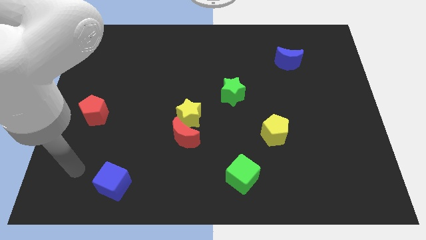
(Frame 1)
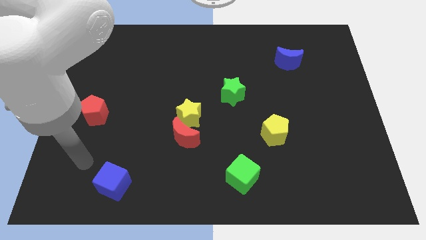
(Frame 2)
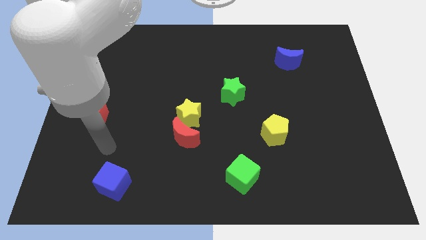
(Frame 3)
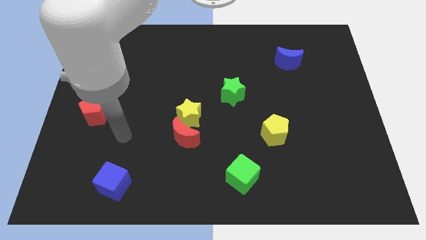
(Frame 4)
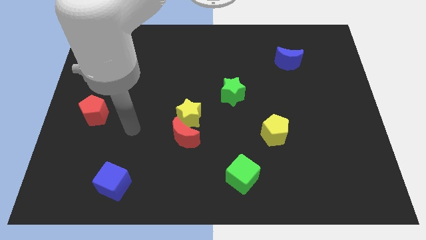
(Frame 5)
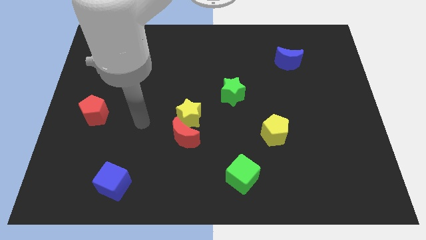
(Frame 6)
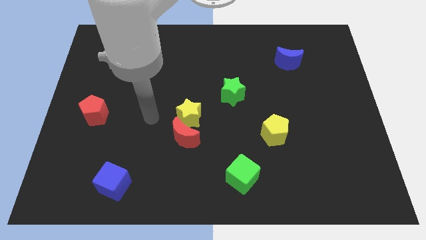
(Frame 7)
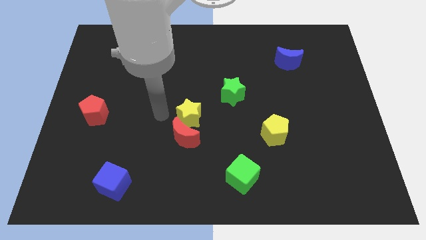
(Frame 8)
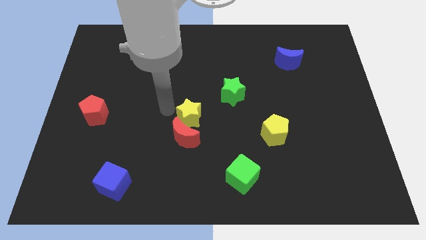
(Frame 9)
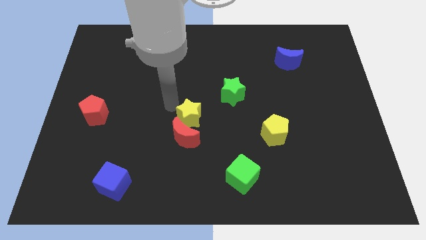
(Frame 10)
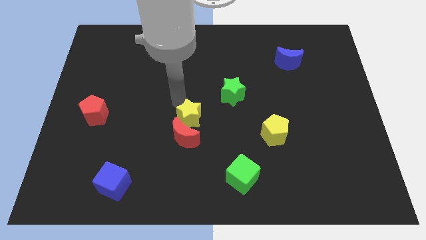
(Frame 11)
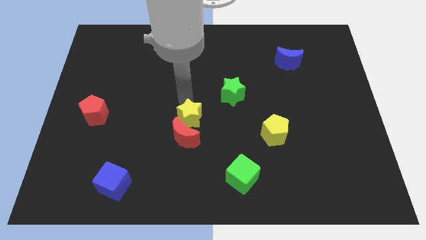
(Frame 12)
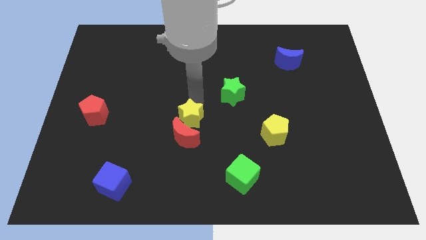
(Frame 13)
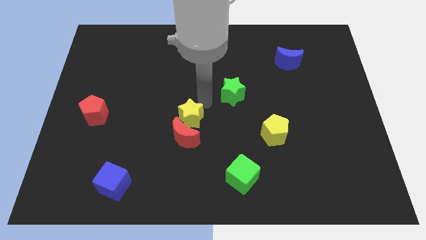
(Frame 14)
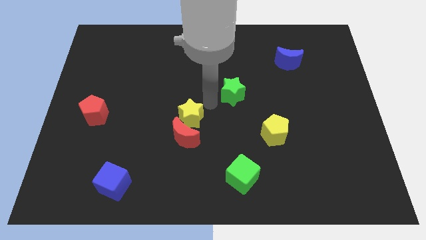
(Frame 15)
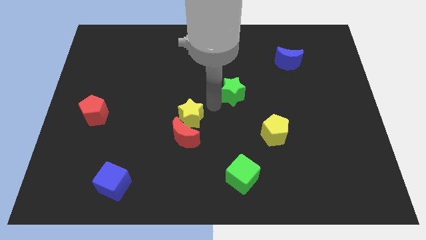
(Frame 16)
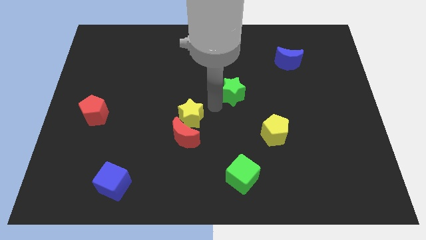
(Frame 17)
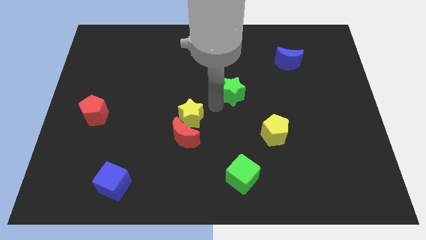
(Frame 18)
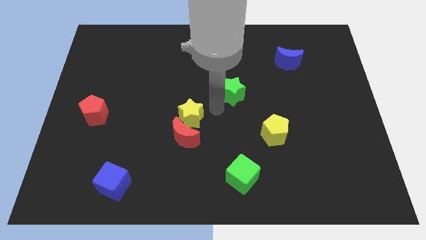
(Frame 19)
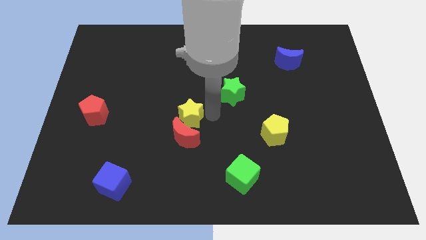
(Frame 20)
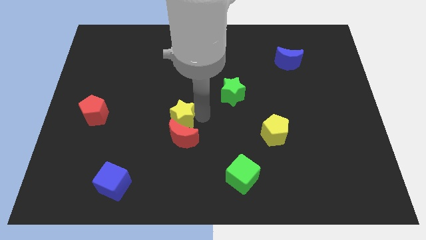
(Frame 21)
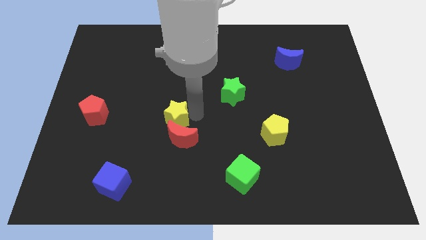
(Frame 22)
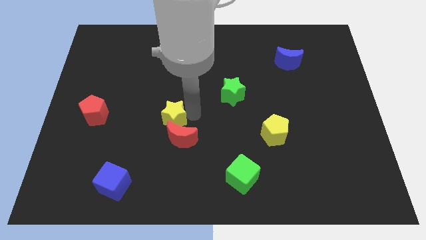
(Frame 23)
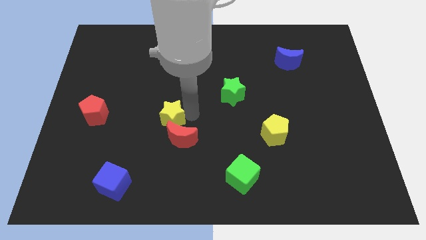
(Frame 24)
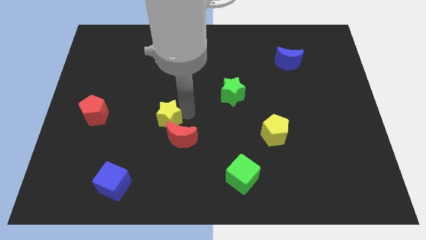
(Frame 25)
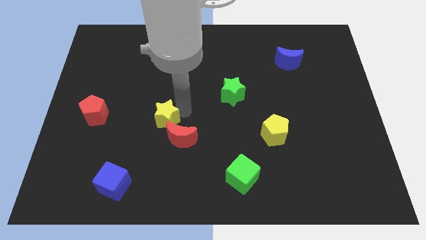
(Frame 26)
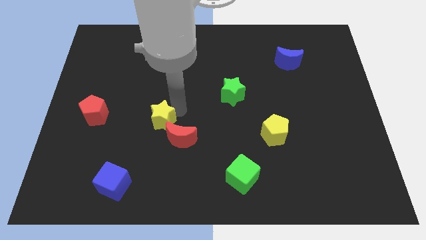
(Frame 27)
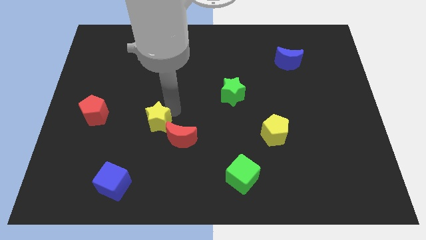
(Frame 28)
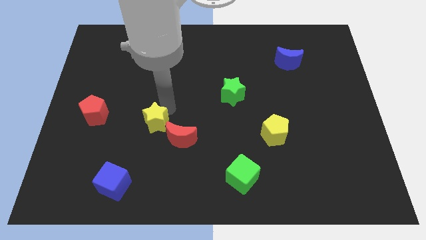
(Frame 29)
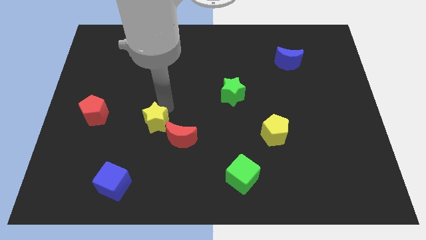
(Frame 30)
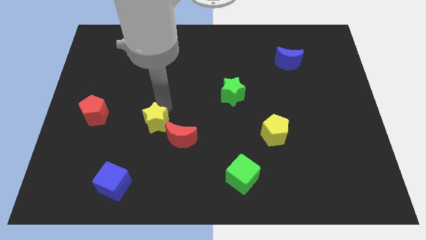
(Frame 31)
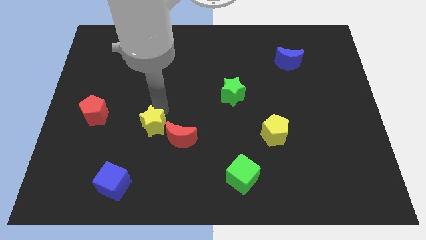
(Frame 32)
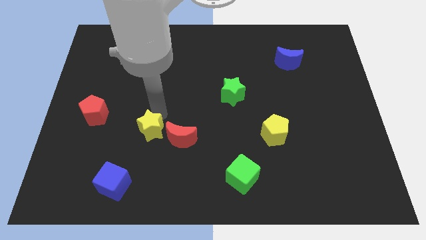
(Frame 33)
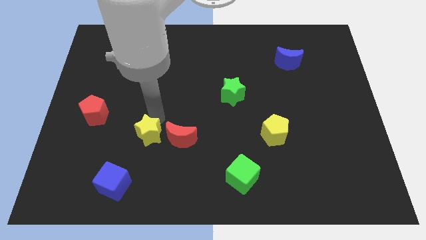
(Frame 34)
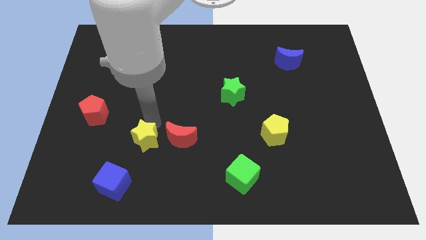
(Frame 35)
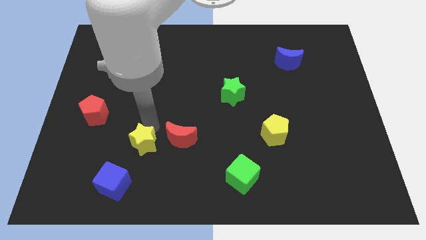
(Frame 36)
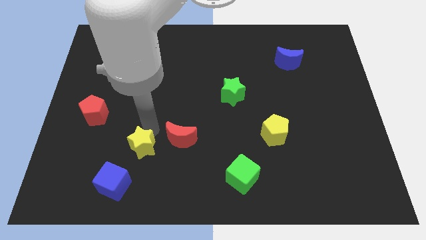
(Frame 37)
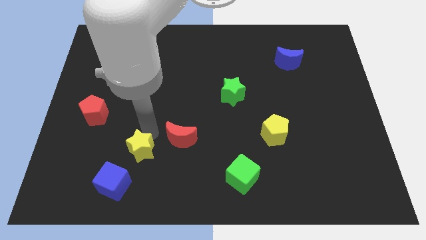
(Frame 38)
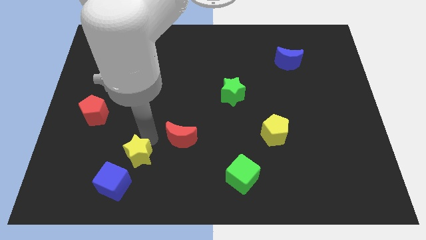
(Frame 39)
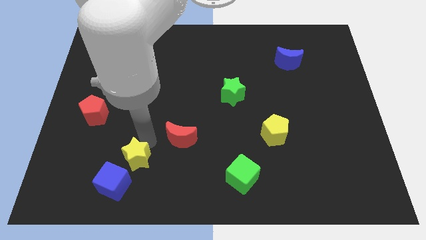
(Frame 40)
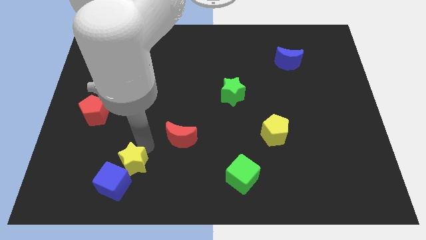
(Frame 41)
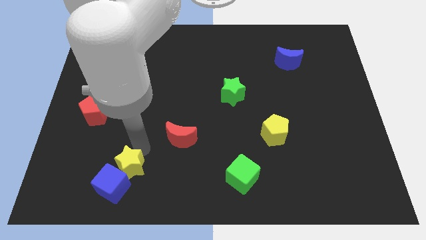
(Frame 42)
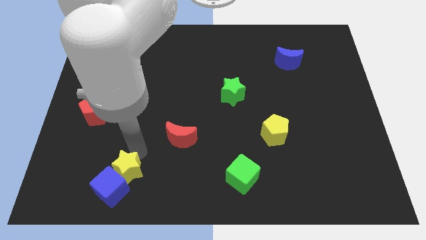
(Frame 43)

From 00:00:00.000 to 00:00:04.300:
push the yellow star towards the blue cube

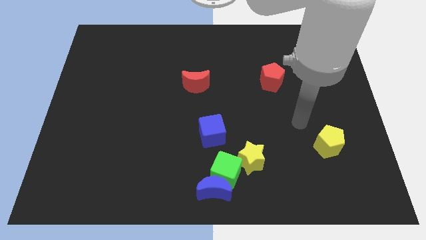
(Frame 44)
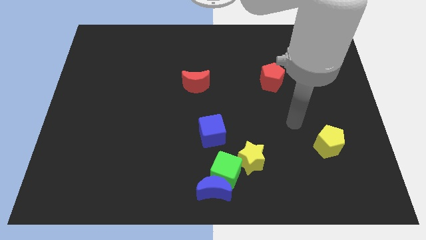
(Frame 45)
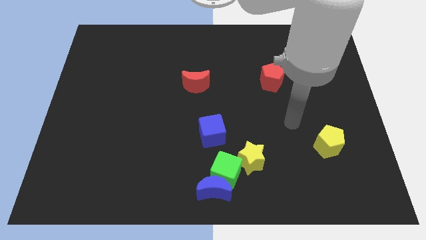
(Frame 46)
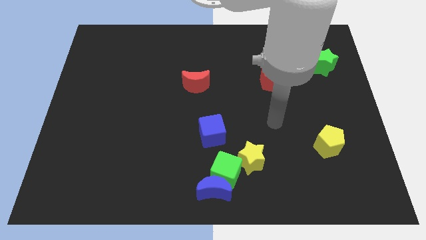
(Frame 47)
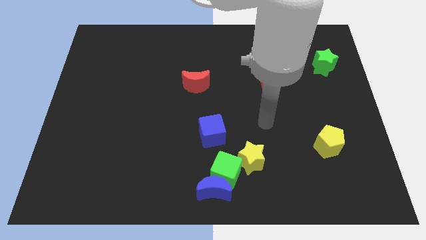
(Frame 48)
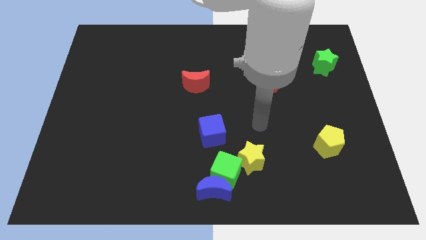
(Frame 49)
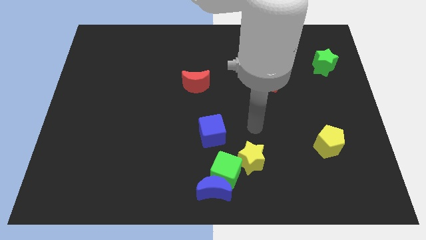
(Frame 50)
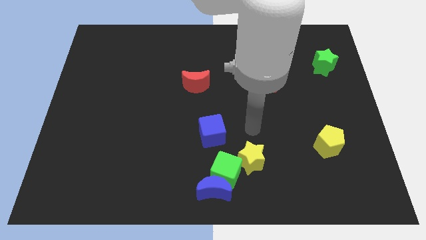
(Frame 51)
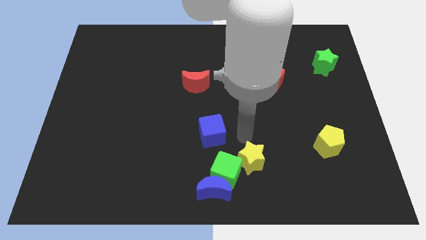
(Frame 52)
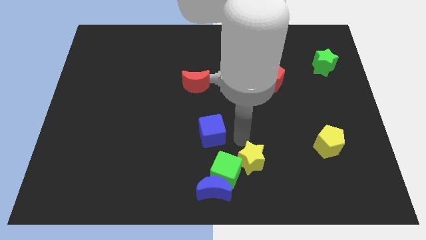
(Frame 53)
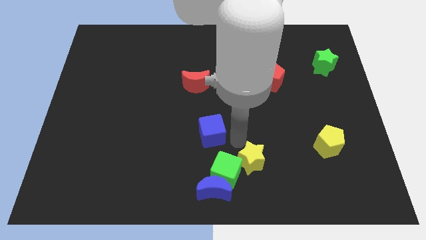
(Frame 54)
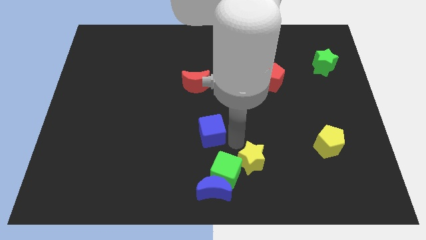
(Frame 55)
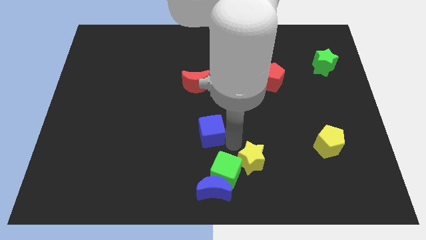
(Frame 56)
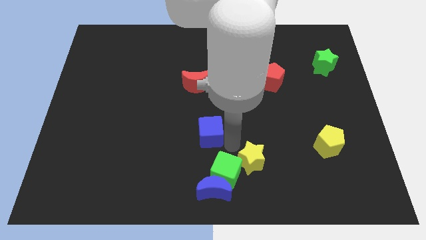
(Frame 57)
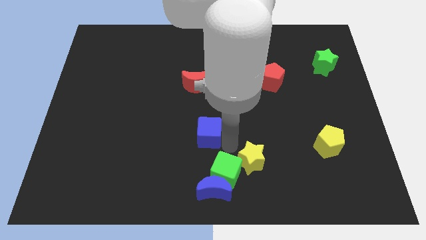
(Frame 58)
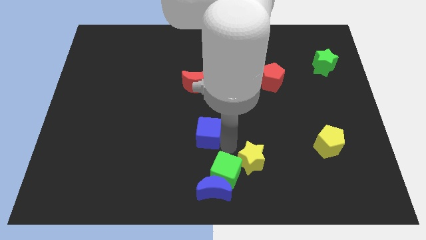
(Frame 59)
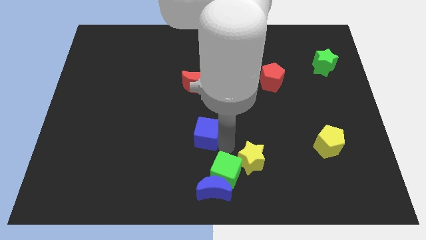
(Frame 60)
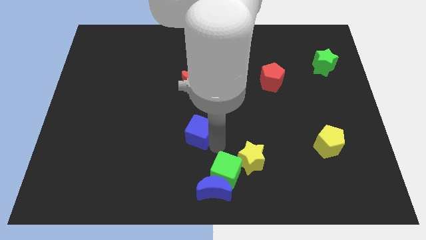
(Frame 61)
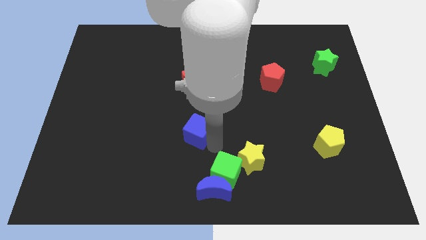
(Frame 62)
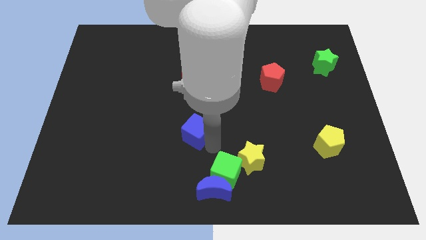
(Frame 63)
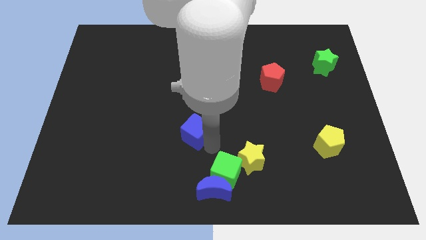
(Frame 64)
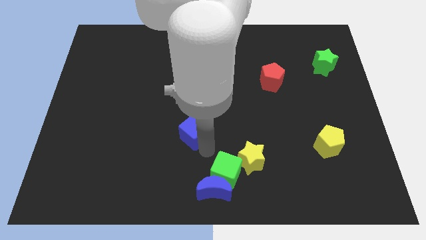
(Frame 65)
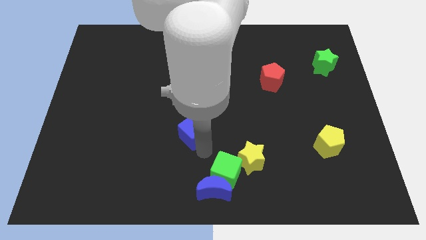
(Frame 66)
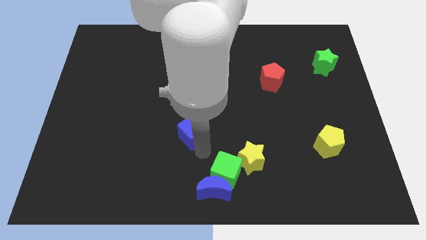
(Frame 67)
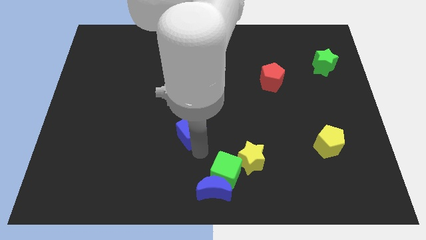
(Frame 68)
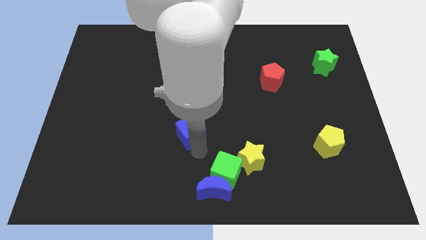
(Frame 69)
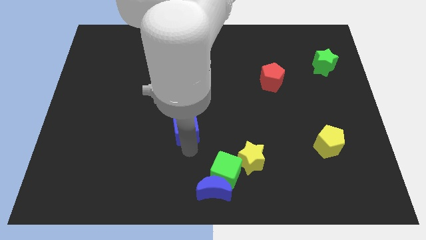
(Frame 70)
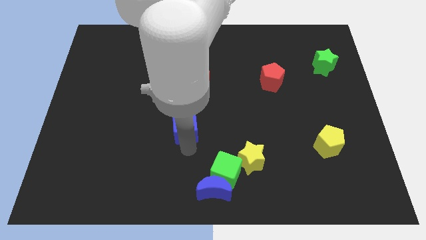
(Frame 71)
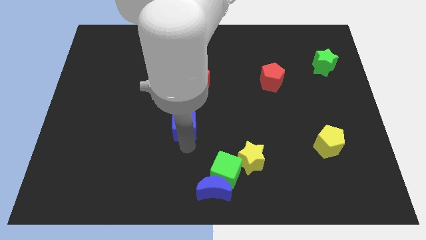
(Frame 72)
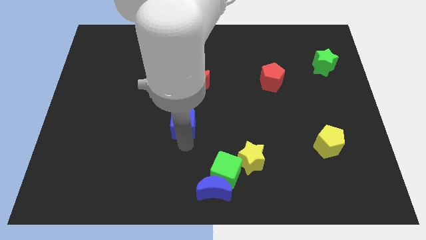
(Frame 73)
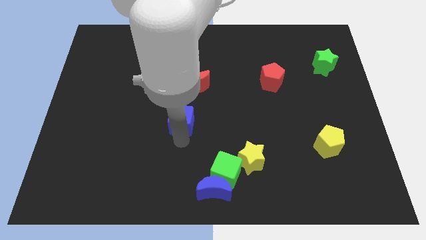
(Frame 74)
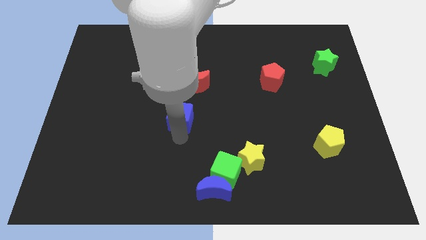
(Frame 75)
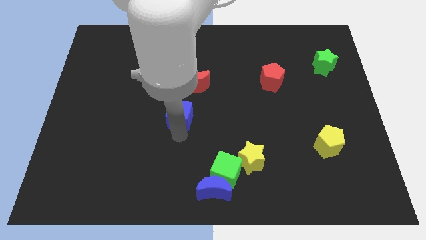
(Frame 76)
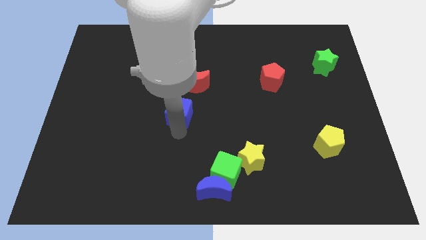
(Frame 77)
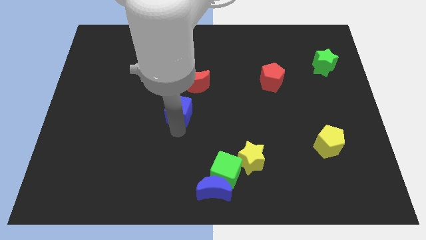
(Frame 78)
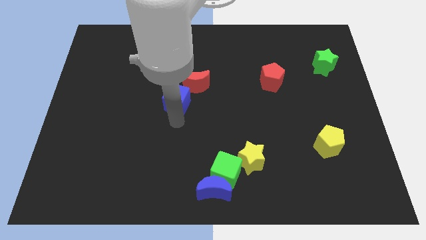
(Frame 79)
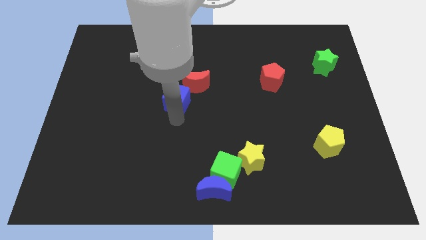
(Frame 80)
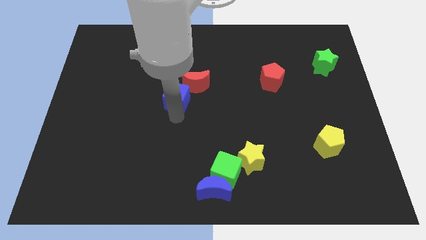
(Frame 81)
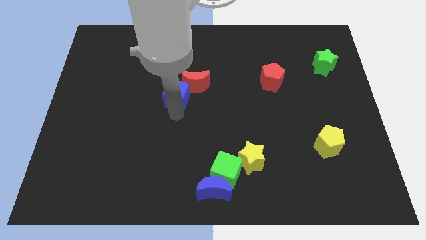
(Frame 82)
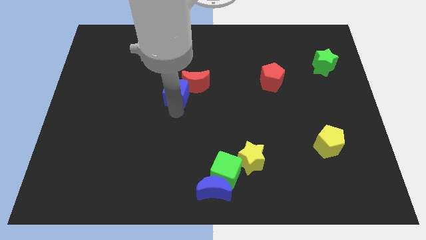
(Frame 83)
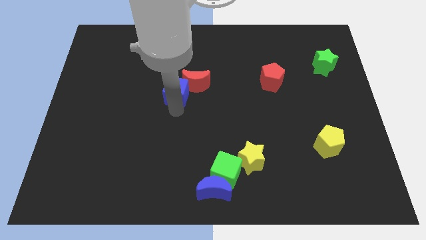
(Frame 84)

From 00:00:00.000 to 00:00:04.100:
move the blue cube next to the red moon
